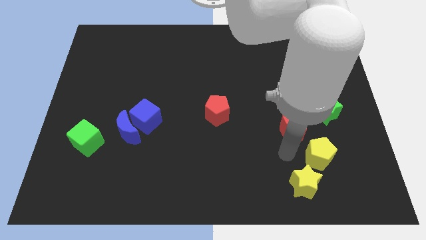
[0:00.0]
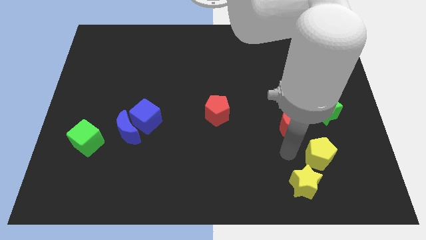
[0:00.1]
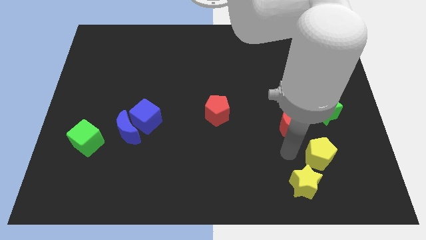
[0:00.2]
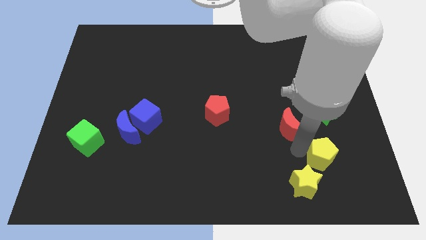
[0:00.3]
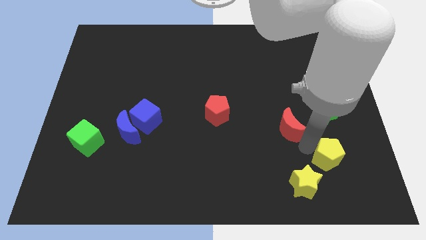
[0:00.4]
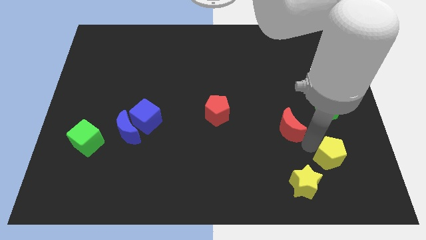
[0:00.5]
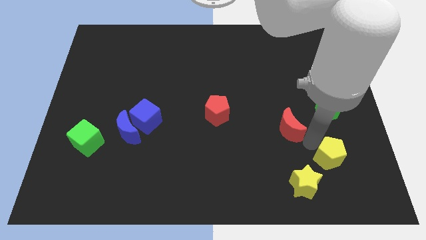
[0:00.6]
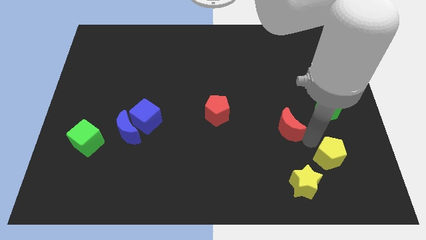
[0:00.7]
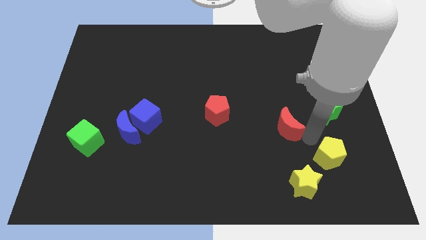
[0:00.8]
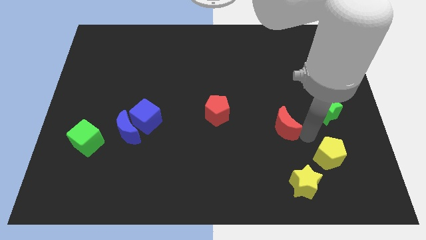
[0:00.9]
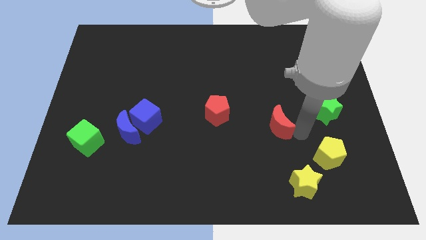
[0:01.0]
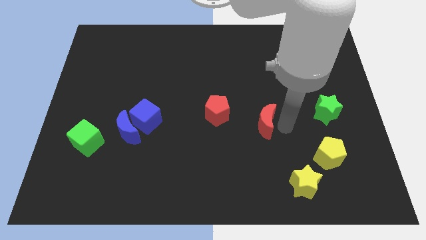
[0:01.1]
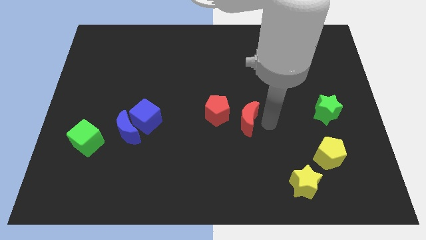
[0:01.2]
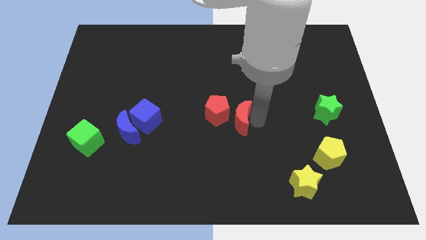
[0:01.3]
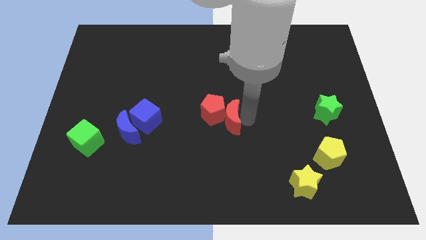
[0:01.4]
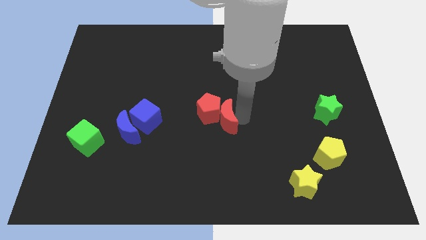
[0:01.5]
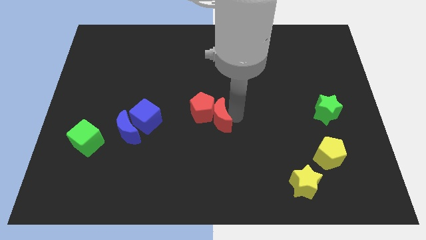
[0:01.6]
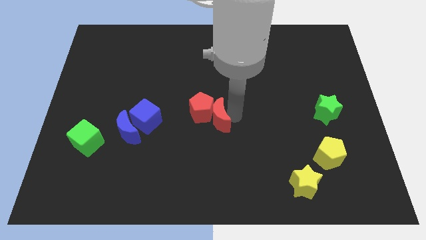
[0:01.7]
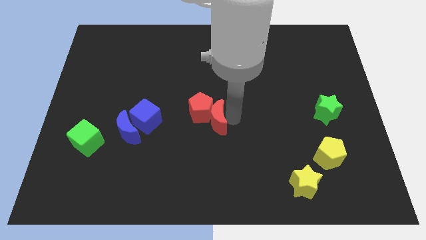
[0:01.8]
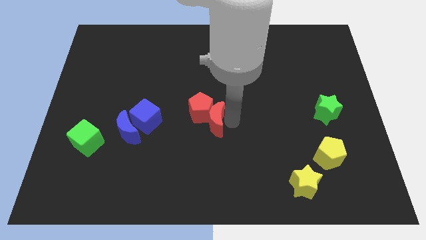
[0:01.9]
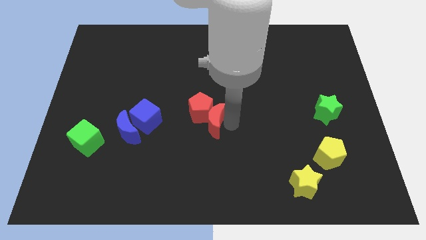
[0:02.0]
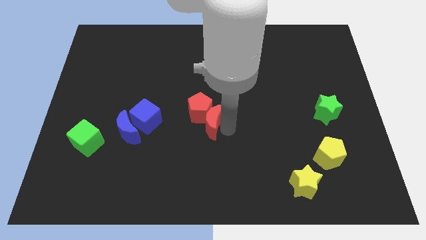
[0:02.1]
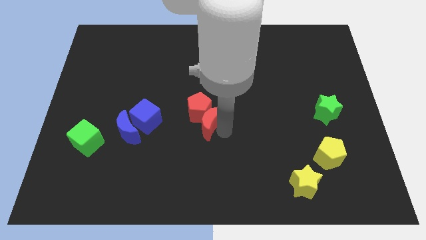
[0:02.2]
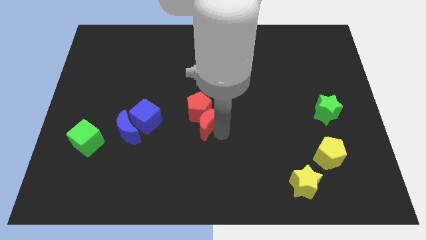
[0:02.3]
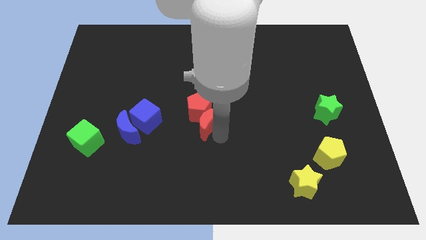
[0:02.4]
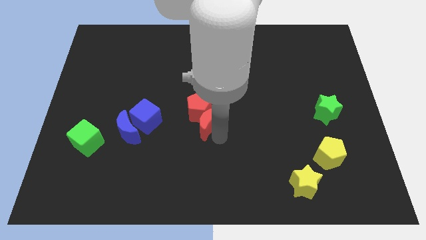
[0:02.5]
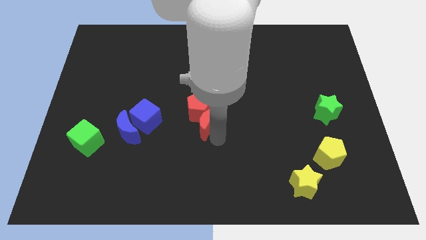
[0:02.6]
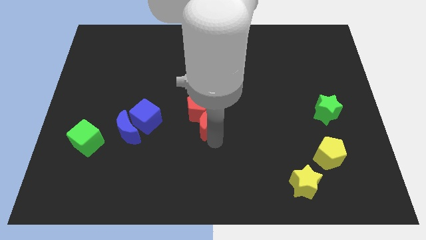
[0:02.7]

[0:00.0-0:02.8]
move red moon towards red pentagon

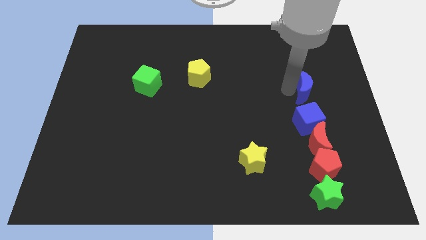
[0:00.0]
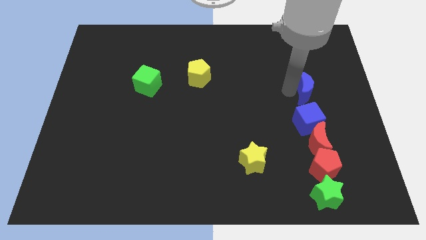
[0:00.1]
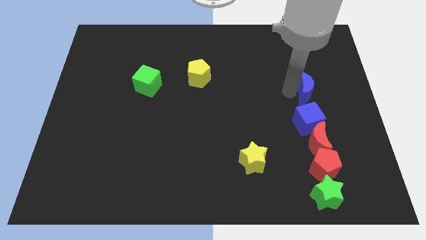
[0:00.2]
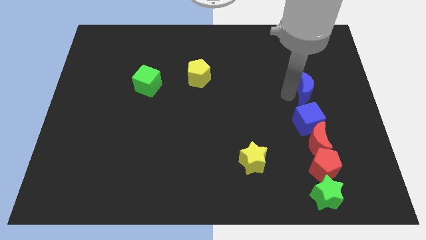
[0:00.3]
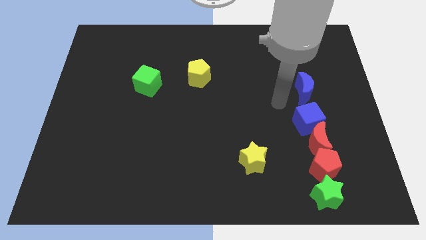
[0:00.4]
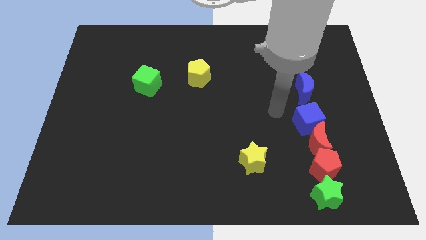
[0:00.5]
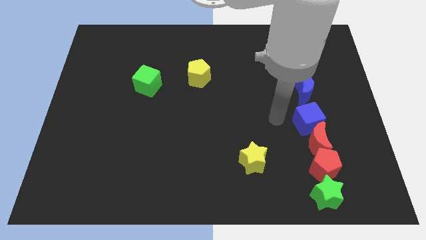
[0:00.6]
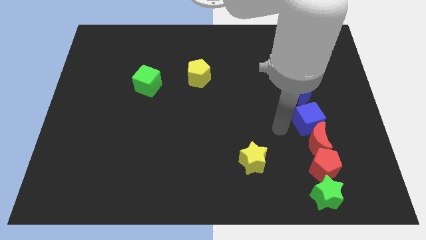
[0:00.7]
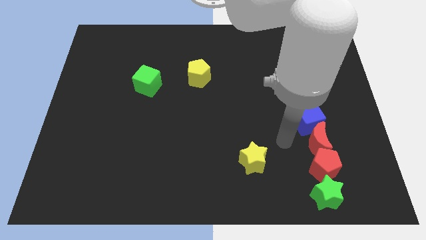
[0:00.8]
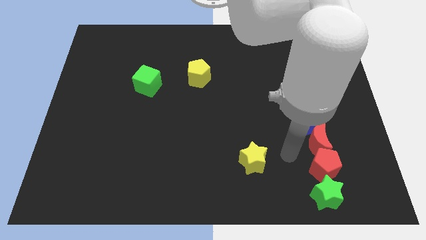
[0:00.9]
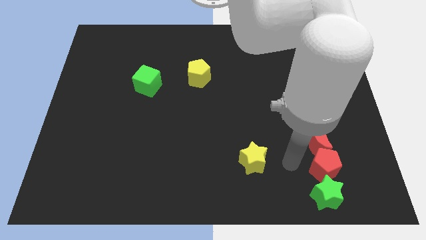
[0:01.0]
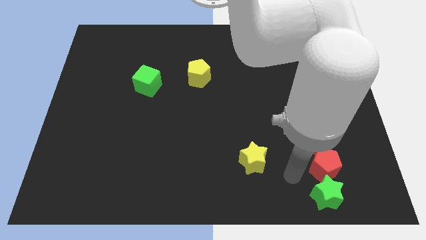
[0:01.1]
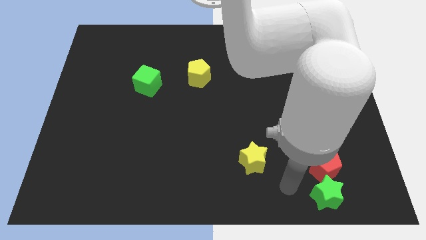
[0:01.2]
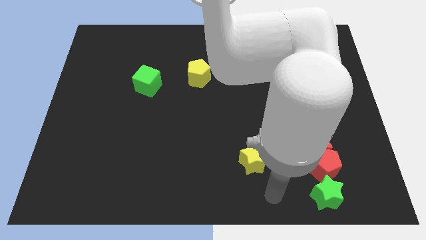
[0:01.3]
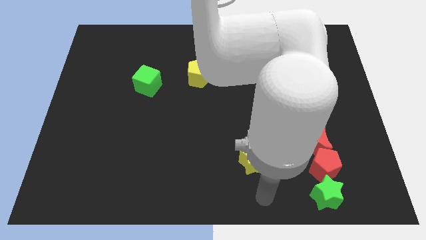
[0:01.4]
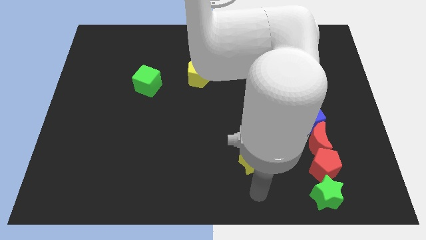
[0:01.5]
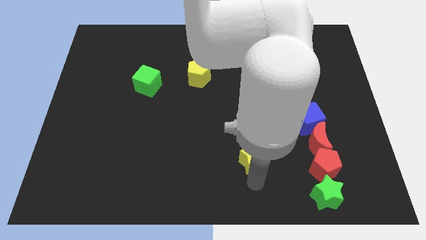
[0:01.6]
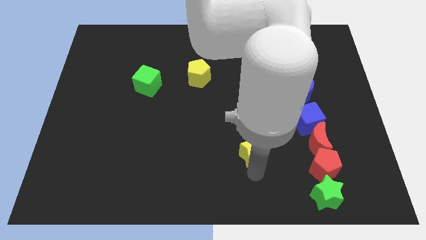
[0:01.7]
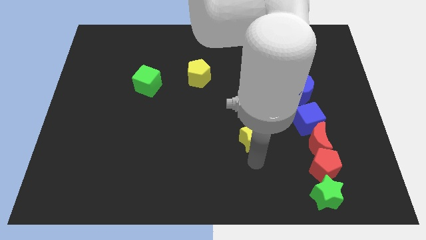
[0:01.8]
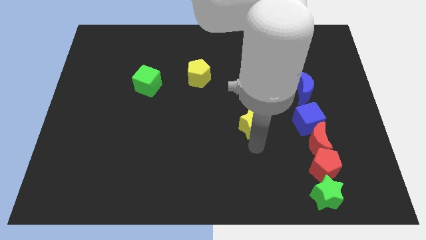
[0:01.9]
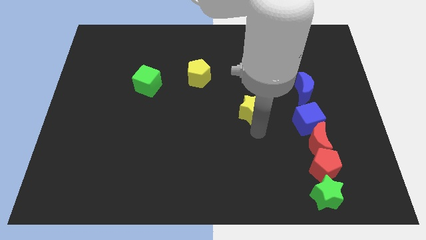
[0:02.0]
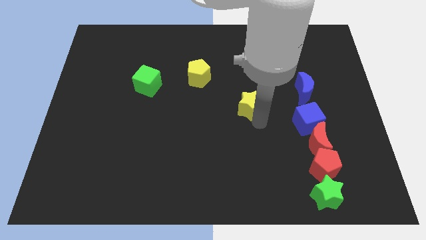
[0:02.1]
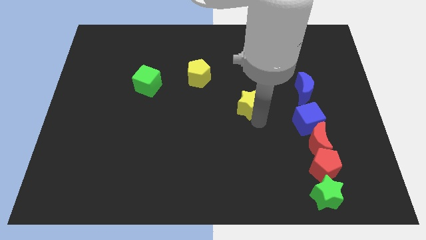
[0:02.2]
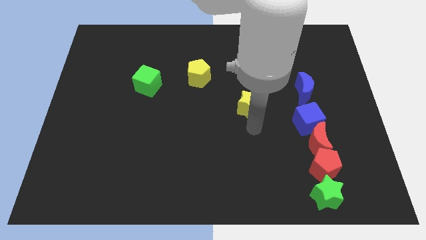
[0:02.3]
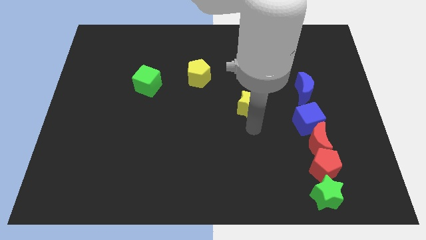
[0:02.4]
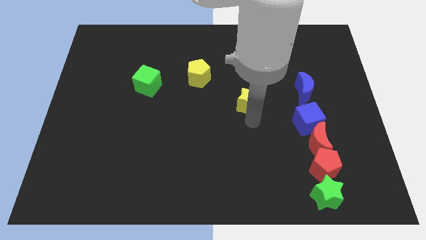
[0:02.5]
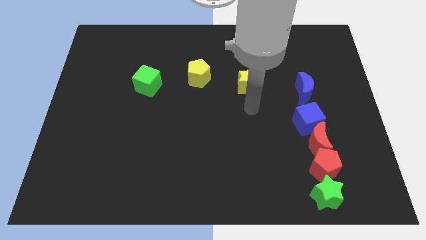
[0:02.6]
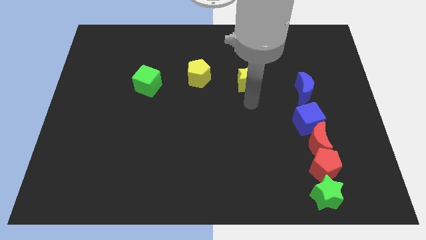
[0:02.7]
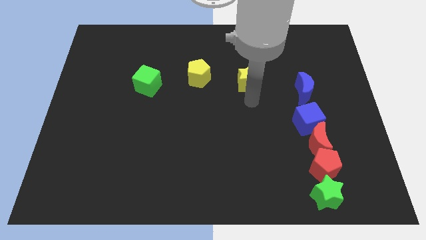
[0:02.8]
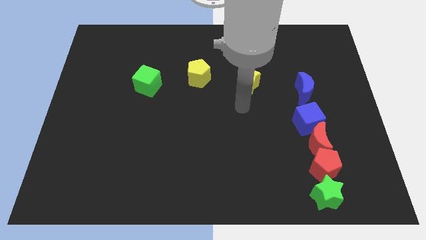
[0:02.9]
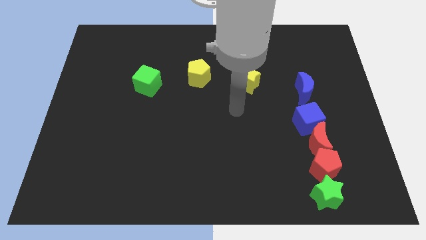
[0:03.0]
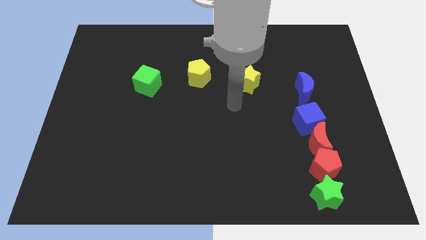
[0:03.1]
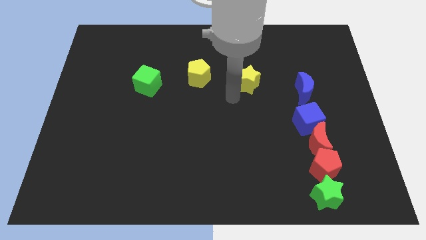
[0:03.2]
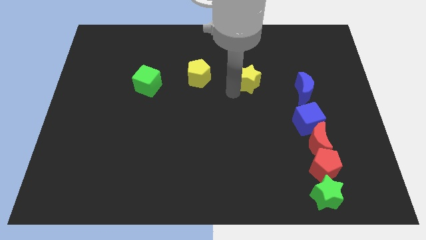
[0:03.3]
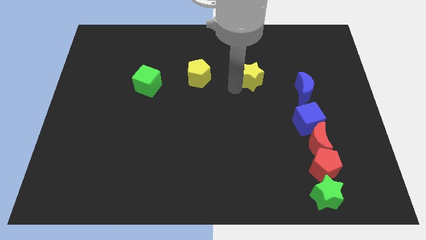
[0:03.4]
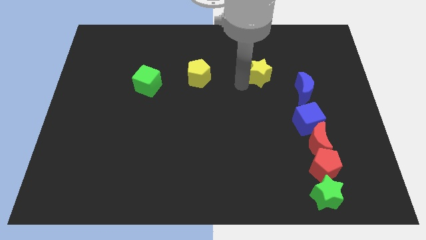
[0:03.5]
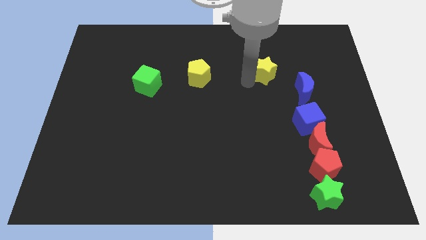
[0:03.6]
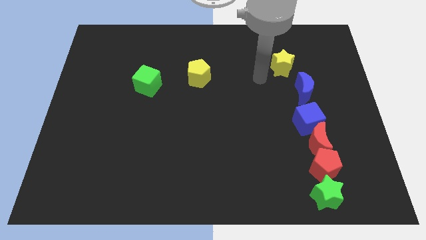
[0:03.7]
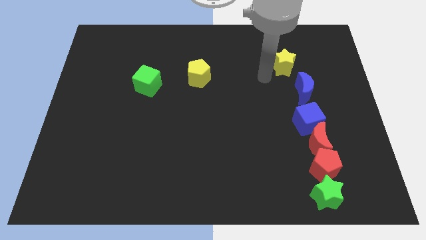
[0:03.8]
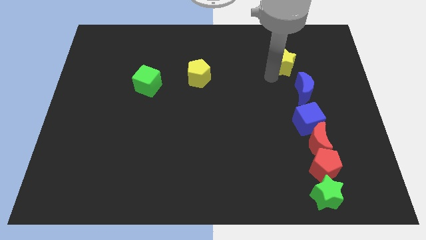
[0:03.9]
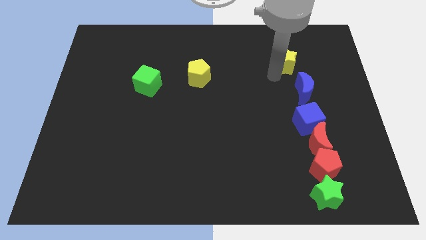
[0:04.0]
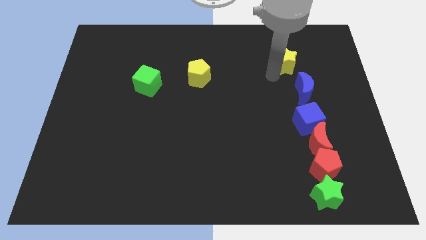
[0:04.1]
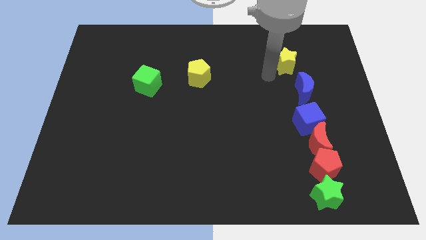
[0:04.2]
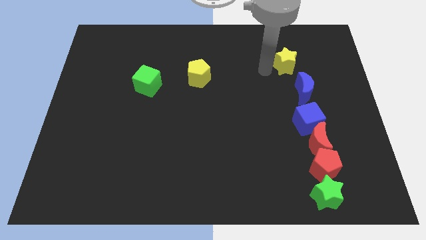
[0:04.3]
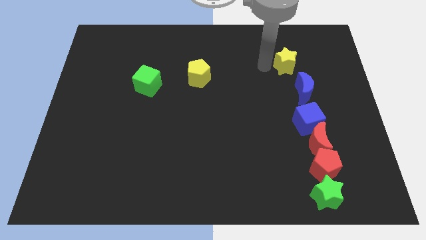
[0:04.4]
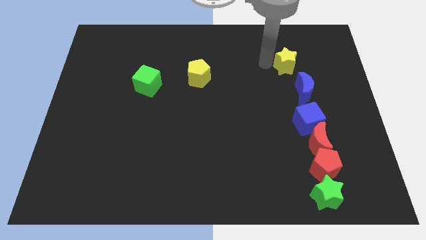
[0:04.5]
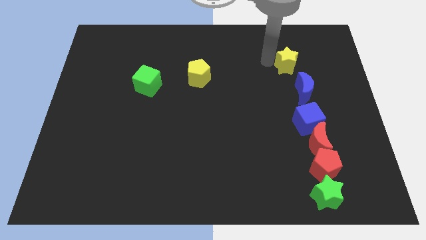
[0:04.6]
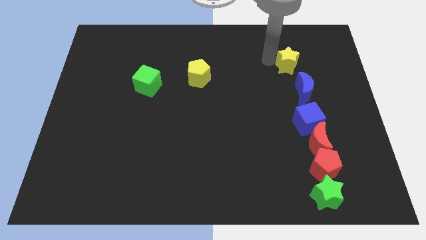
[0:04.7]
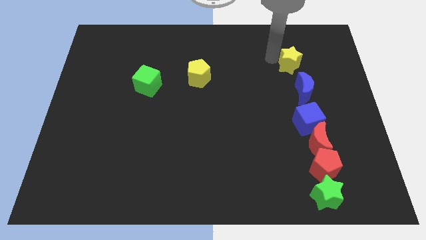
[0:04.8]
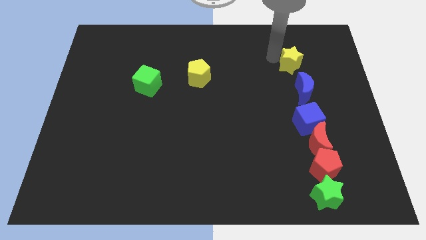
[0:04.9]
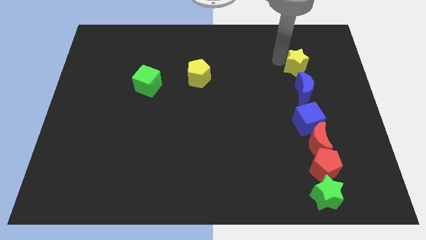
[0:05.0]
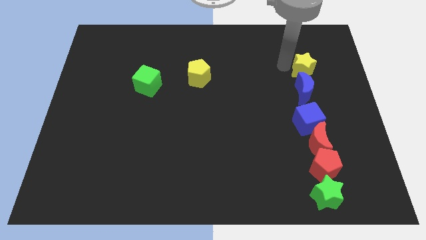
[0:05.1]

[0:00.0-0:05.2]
push the yellow star above the blue moon

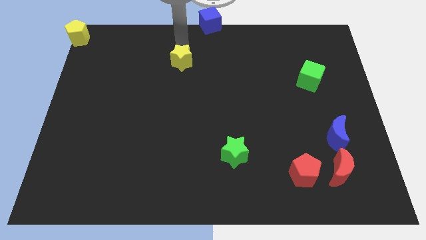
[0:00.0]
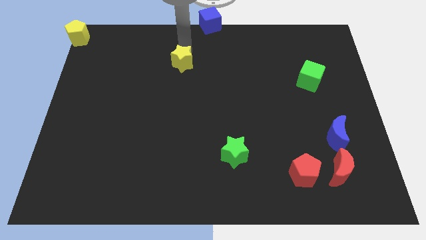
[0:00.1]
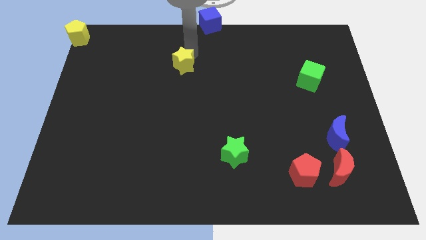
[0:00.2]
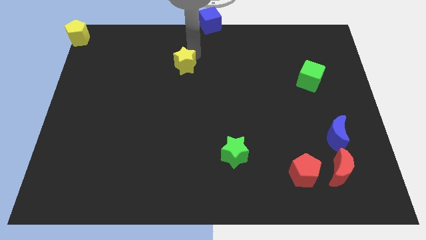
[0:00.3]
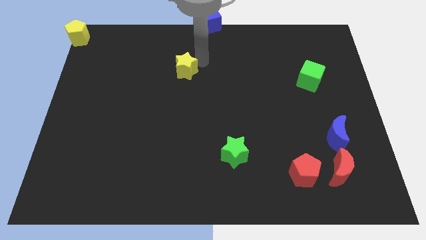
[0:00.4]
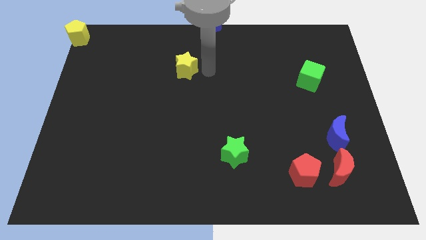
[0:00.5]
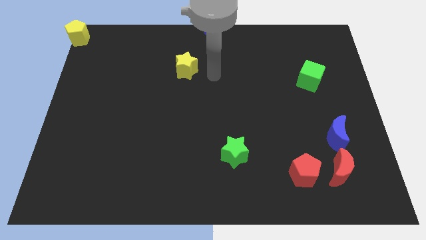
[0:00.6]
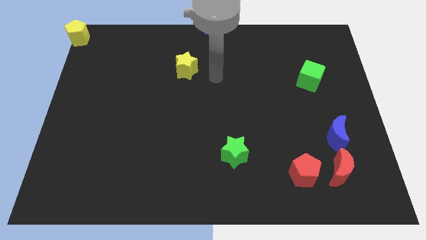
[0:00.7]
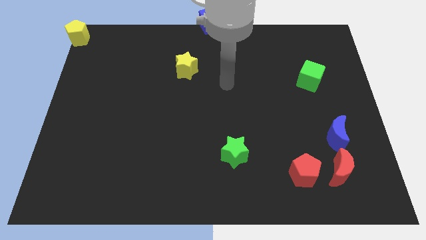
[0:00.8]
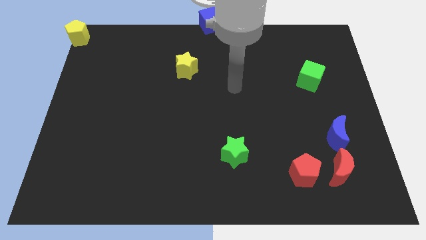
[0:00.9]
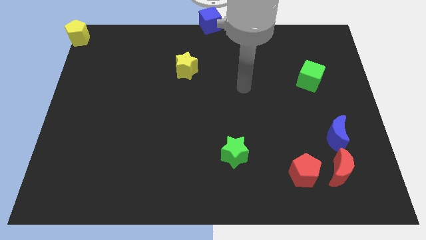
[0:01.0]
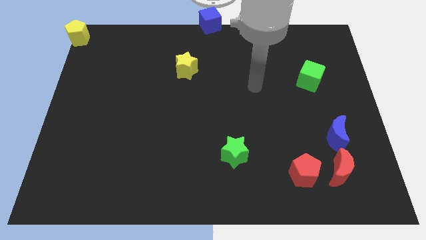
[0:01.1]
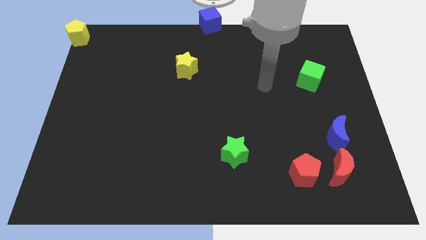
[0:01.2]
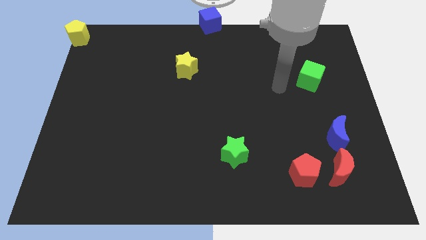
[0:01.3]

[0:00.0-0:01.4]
move yellow star slightly down
